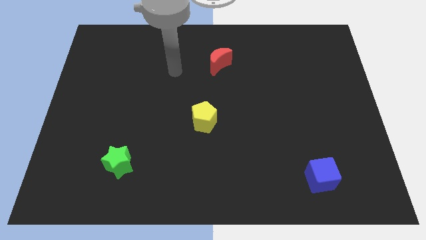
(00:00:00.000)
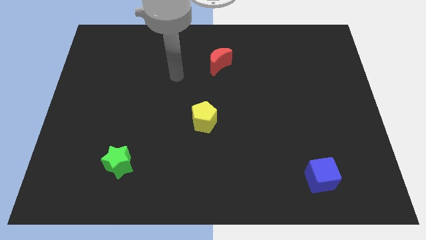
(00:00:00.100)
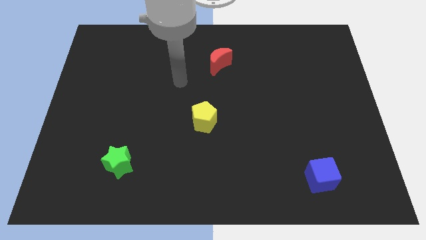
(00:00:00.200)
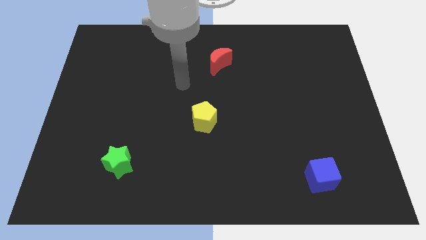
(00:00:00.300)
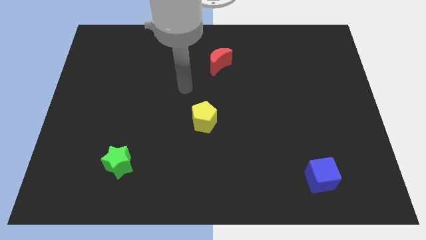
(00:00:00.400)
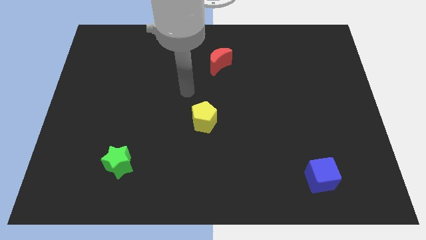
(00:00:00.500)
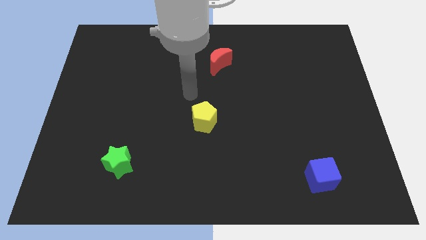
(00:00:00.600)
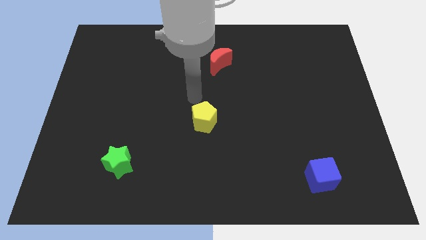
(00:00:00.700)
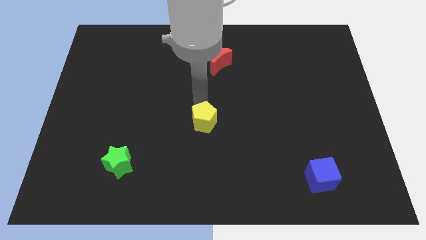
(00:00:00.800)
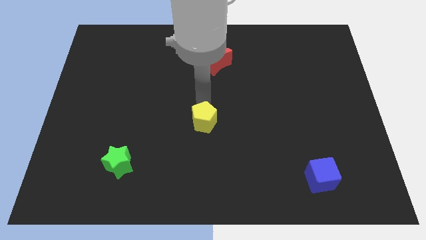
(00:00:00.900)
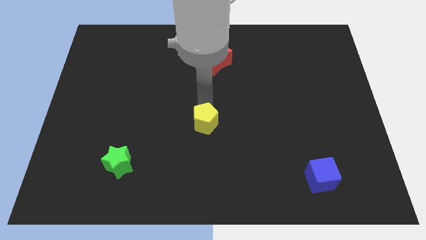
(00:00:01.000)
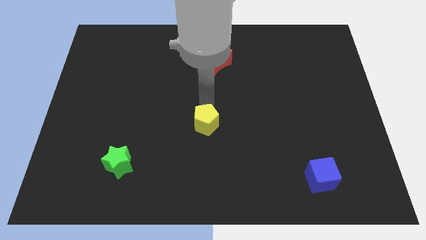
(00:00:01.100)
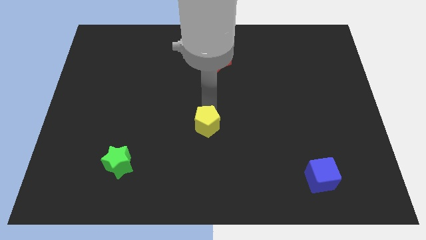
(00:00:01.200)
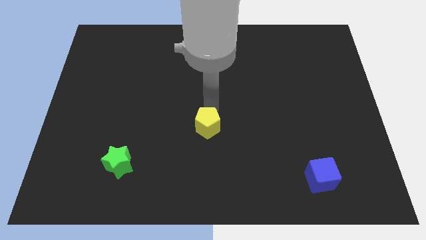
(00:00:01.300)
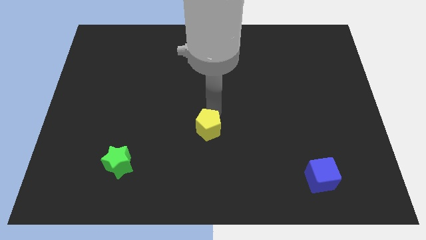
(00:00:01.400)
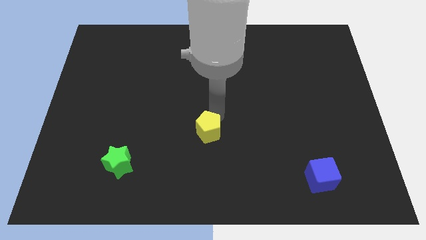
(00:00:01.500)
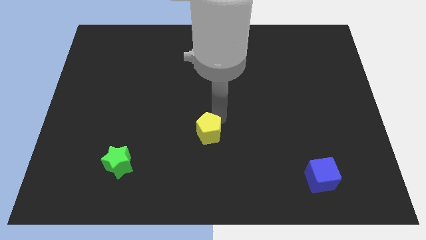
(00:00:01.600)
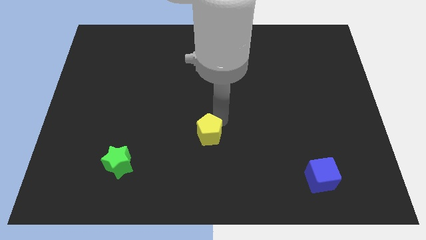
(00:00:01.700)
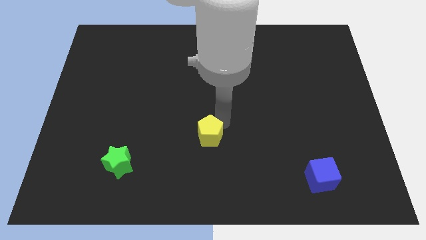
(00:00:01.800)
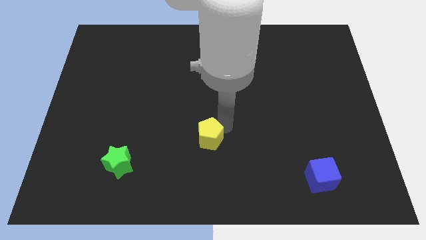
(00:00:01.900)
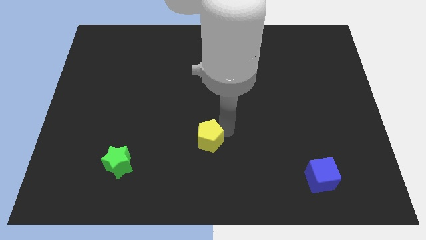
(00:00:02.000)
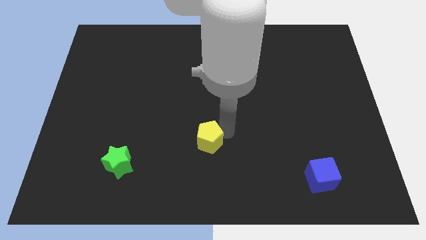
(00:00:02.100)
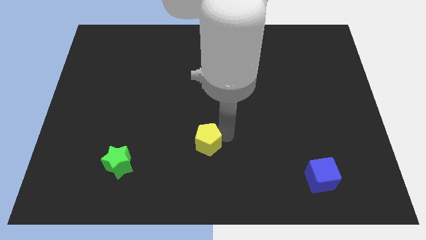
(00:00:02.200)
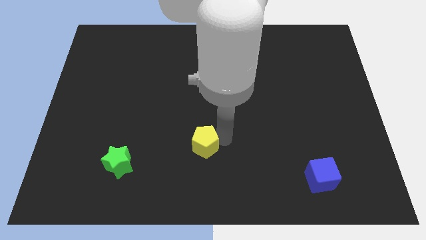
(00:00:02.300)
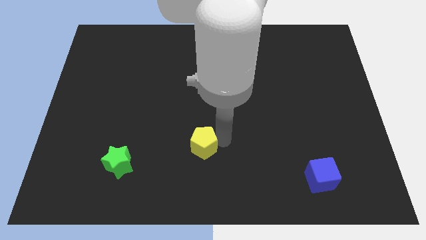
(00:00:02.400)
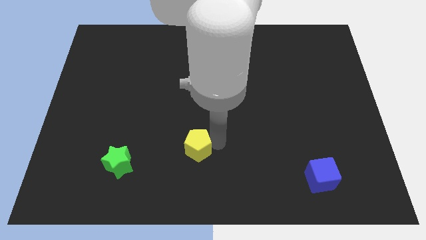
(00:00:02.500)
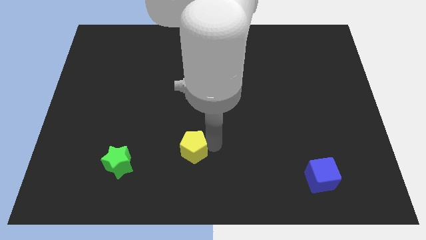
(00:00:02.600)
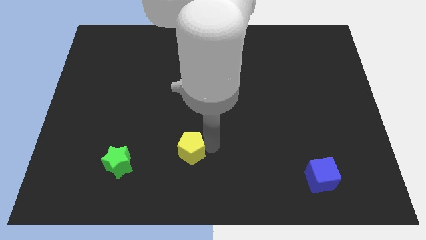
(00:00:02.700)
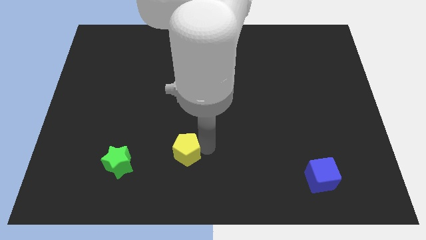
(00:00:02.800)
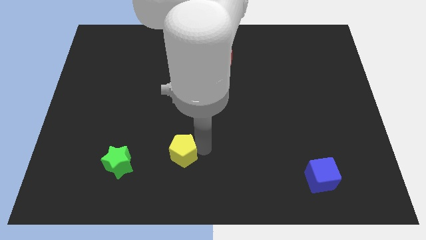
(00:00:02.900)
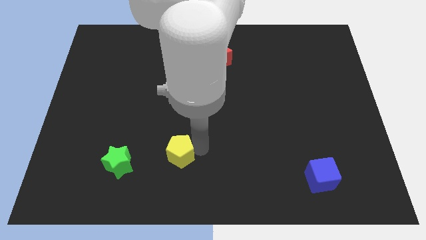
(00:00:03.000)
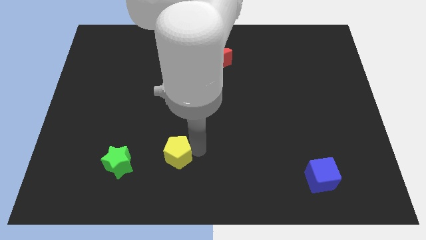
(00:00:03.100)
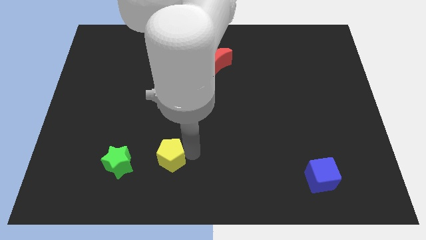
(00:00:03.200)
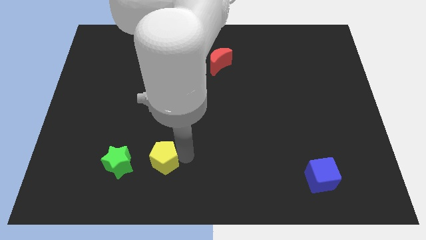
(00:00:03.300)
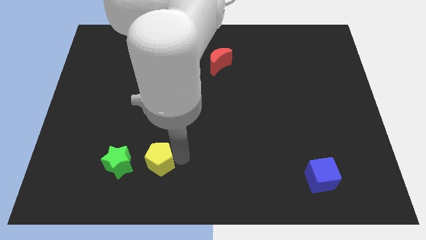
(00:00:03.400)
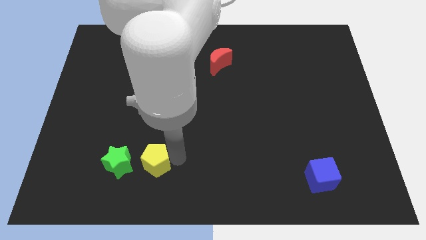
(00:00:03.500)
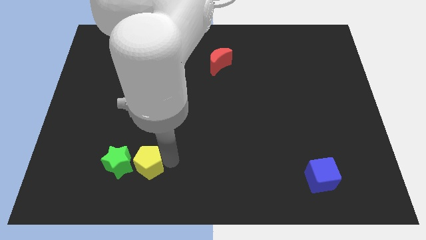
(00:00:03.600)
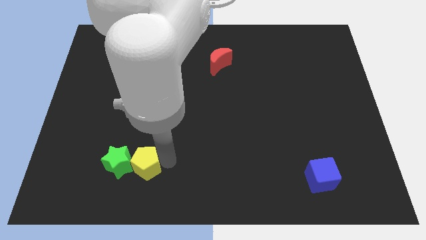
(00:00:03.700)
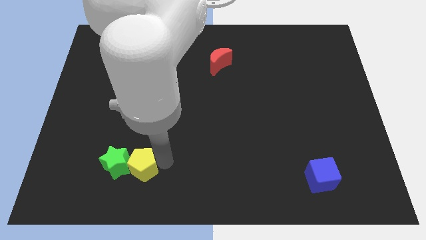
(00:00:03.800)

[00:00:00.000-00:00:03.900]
slide the yellow pentagon next to the star

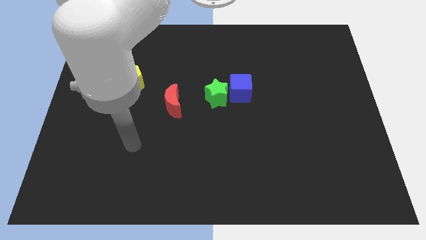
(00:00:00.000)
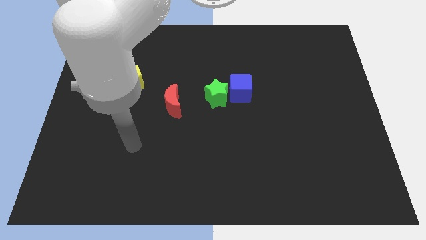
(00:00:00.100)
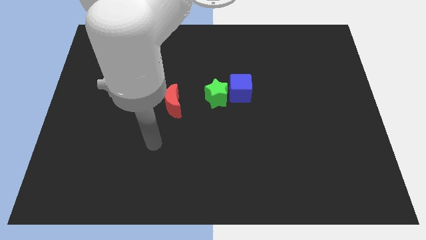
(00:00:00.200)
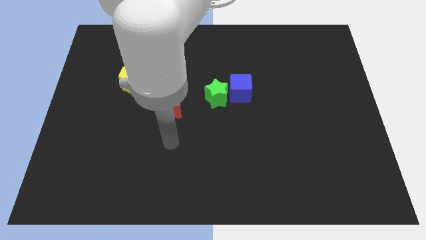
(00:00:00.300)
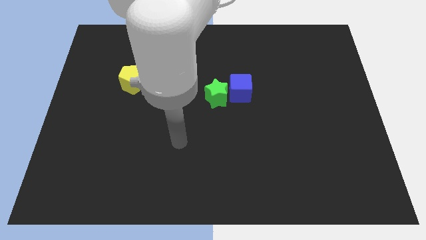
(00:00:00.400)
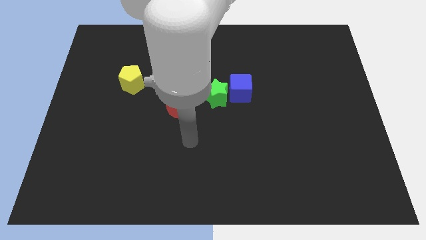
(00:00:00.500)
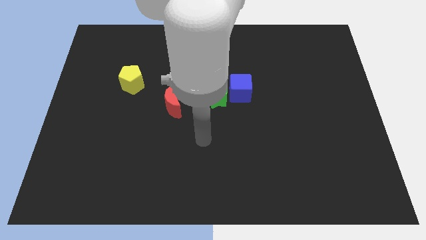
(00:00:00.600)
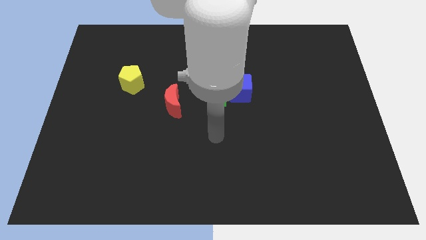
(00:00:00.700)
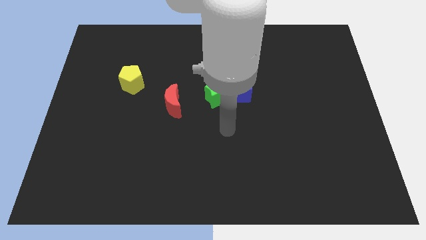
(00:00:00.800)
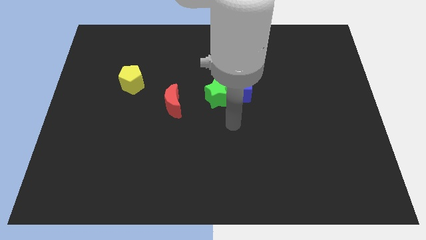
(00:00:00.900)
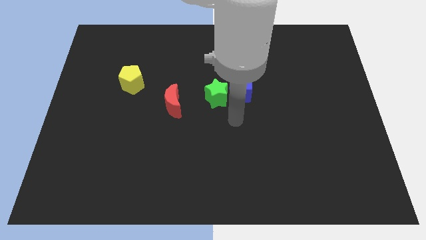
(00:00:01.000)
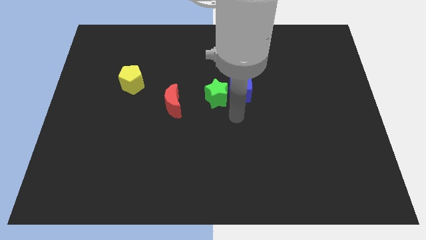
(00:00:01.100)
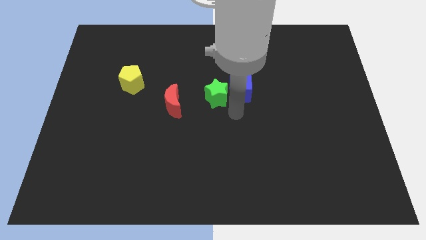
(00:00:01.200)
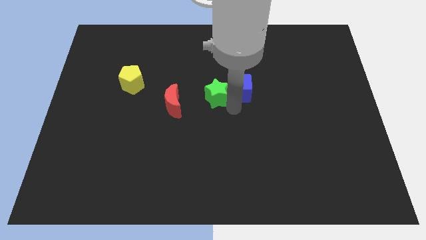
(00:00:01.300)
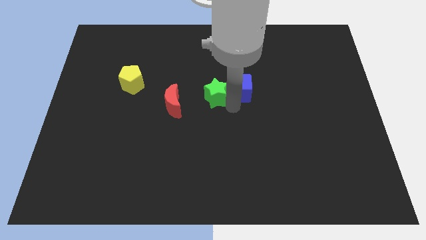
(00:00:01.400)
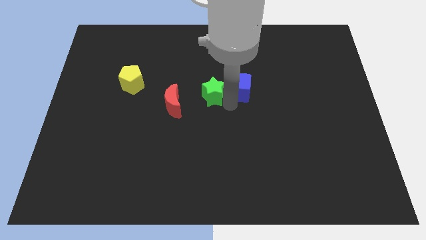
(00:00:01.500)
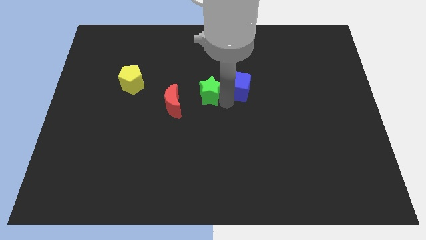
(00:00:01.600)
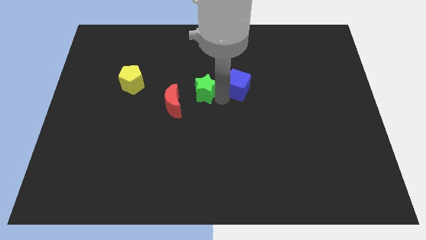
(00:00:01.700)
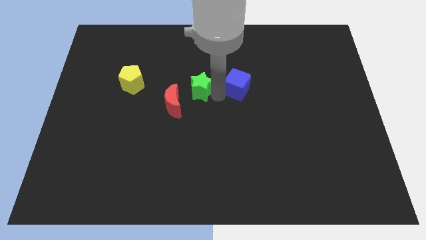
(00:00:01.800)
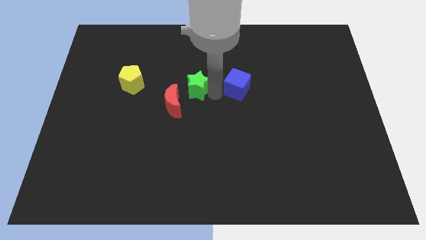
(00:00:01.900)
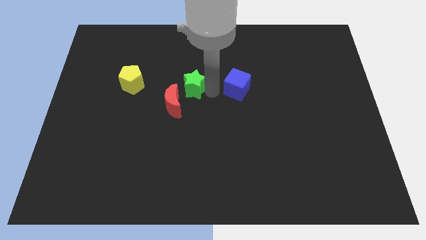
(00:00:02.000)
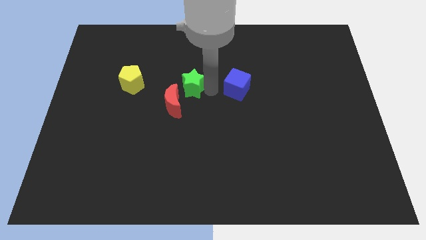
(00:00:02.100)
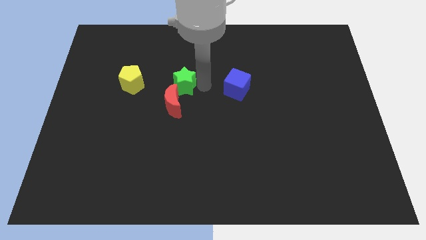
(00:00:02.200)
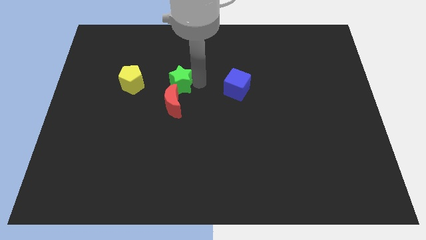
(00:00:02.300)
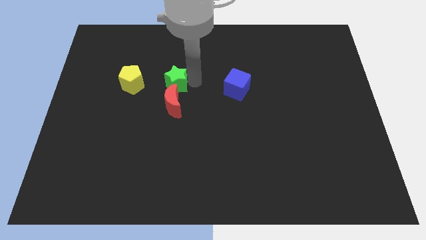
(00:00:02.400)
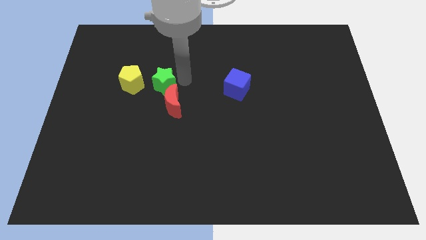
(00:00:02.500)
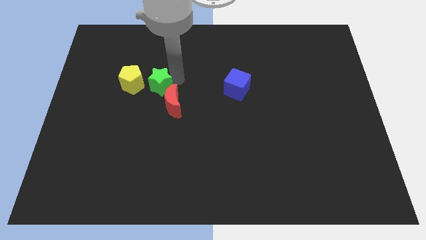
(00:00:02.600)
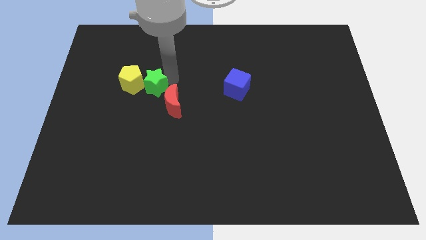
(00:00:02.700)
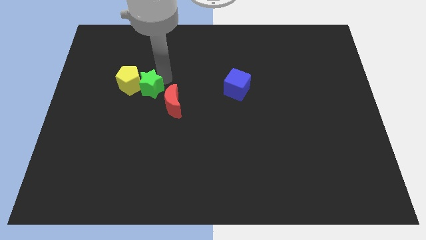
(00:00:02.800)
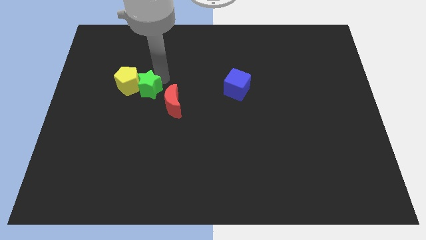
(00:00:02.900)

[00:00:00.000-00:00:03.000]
push the green star next to the pentagon

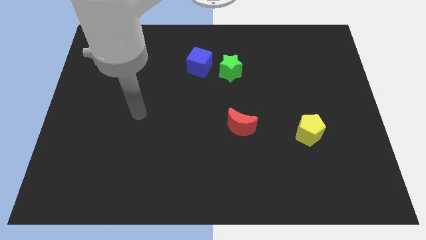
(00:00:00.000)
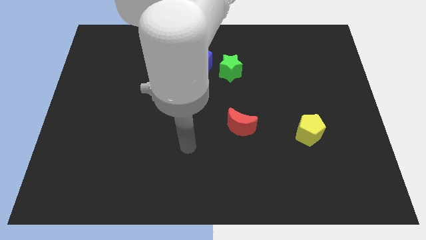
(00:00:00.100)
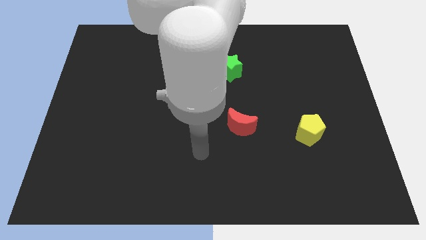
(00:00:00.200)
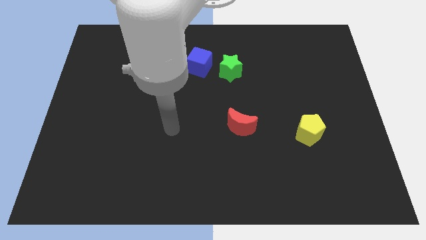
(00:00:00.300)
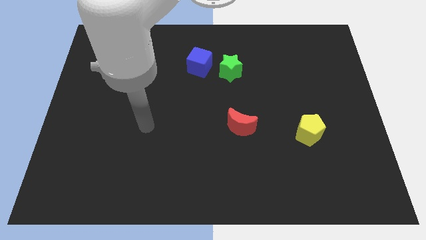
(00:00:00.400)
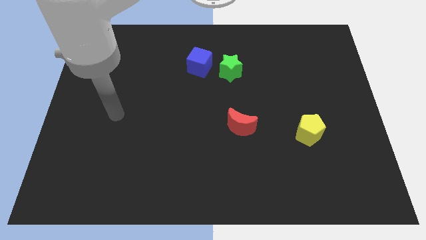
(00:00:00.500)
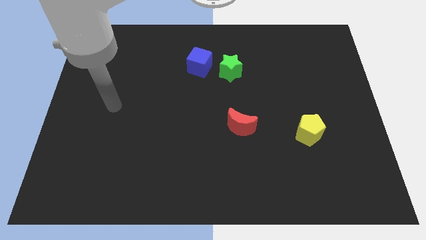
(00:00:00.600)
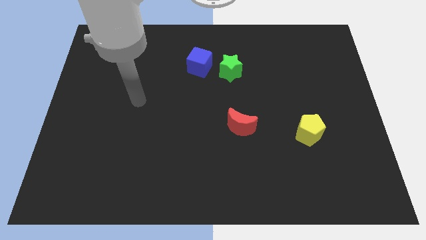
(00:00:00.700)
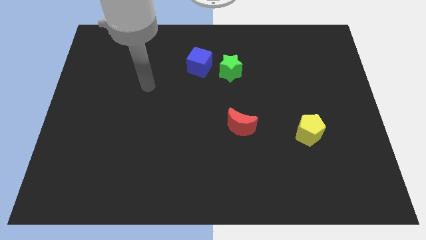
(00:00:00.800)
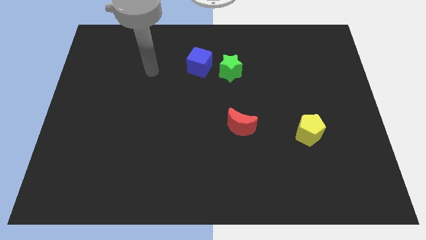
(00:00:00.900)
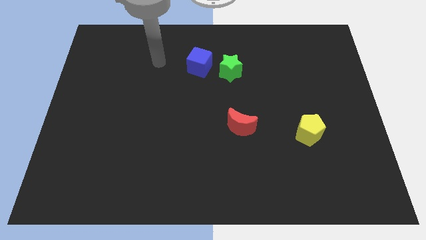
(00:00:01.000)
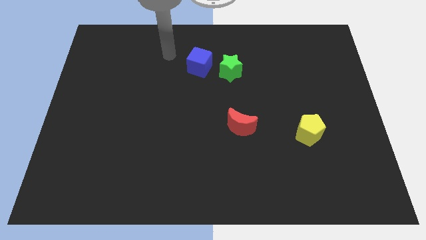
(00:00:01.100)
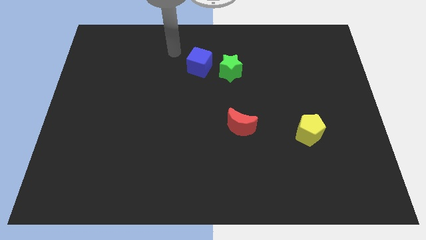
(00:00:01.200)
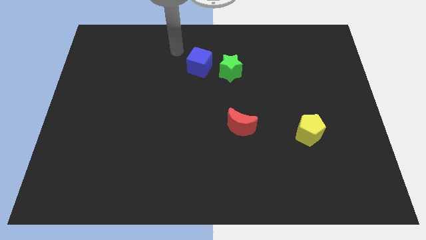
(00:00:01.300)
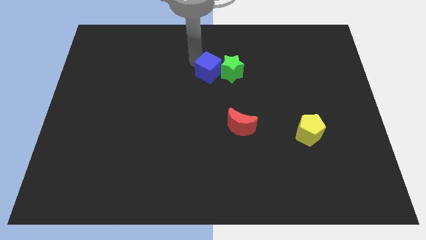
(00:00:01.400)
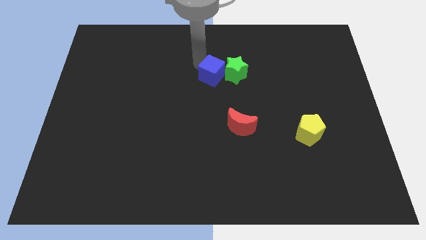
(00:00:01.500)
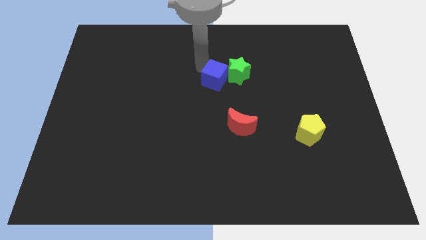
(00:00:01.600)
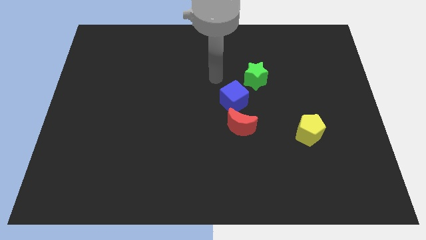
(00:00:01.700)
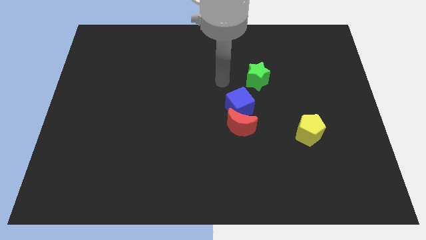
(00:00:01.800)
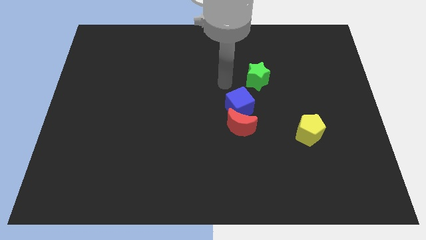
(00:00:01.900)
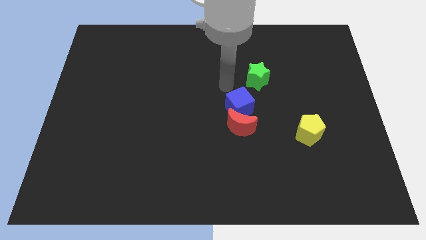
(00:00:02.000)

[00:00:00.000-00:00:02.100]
slide the blue cube close to the red block
